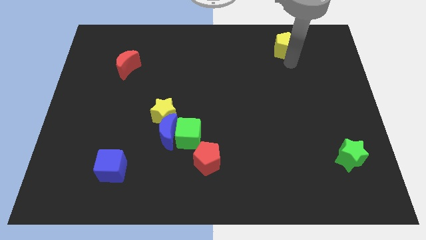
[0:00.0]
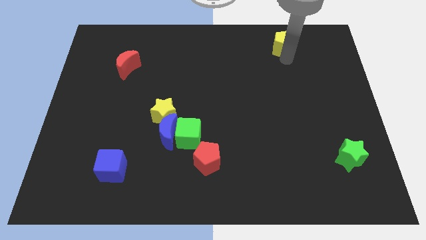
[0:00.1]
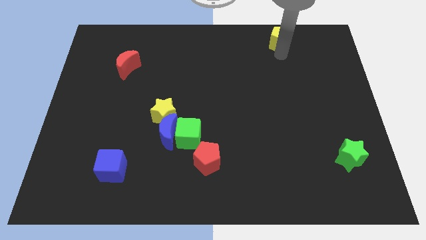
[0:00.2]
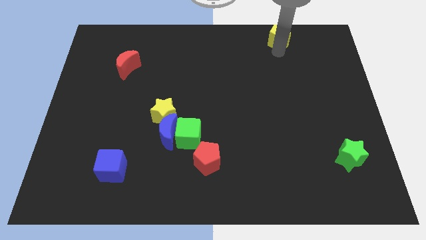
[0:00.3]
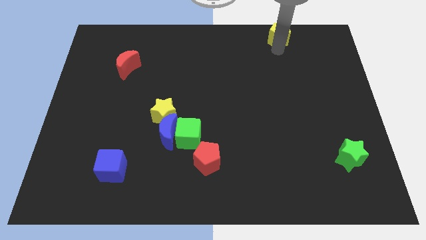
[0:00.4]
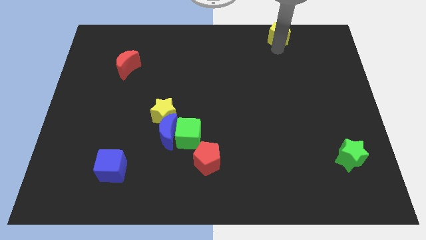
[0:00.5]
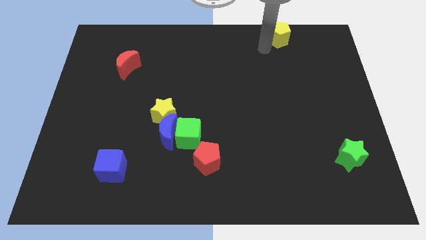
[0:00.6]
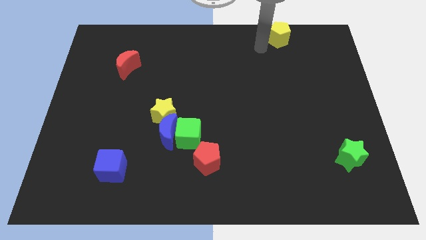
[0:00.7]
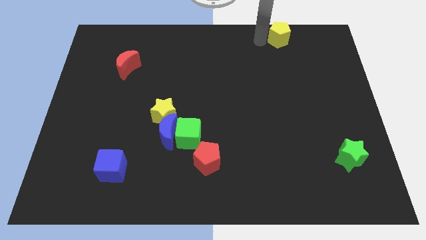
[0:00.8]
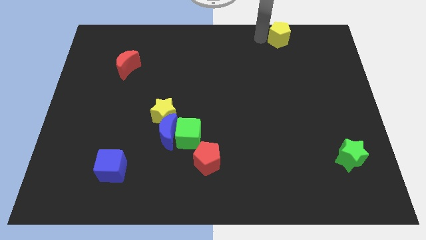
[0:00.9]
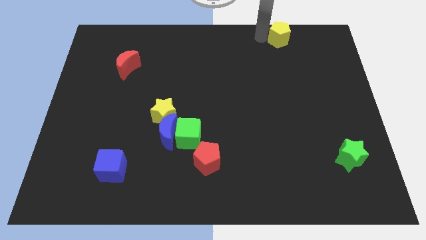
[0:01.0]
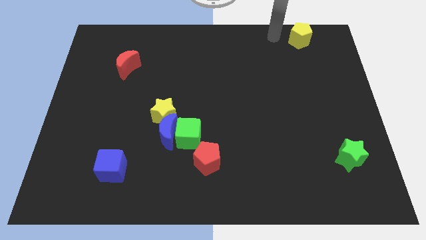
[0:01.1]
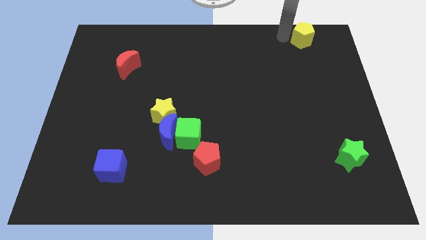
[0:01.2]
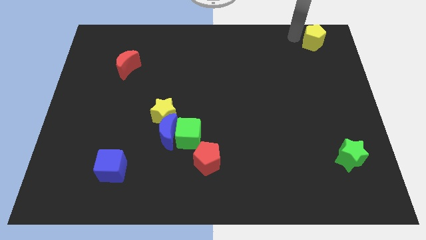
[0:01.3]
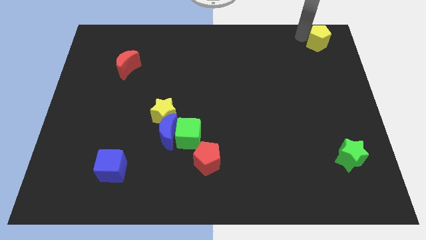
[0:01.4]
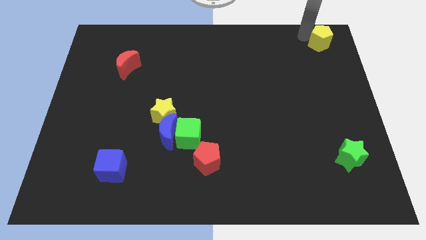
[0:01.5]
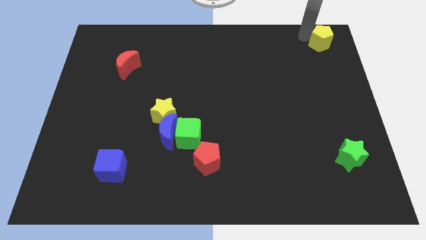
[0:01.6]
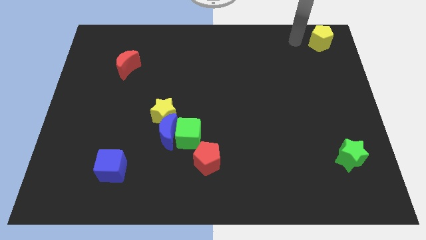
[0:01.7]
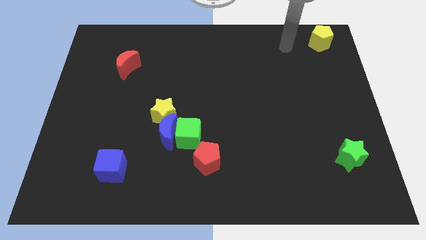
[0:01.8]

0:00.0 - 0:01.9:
place the yellow pentagon to the top right side

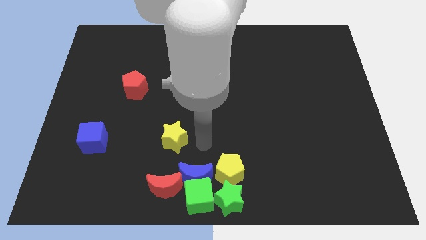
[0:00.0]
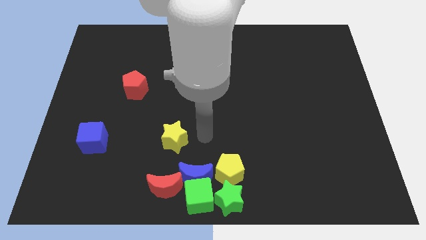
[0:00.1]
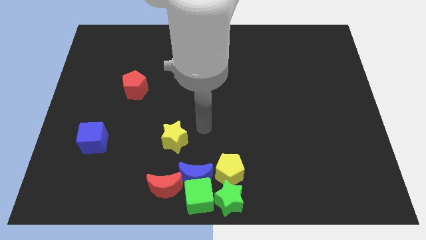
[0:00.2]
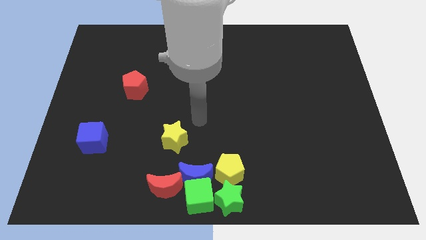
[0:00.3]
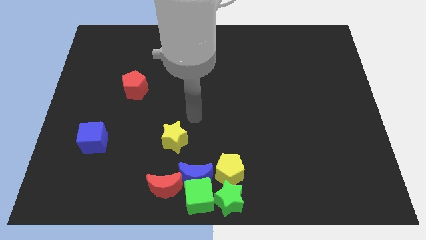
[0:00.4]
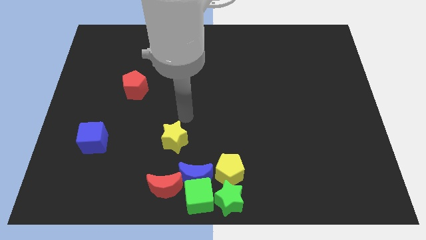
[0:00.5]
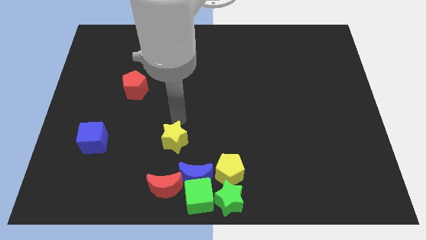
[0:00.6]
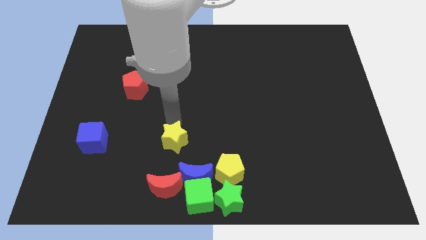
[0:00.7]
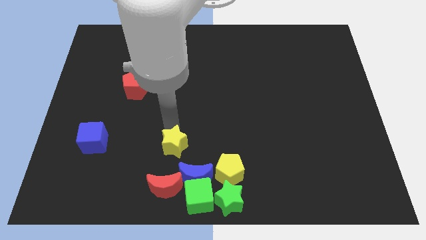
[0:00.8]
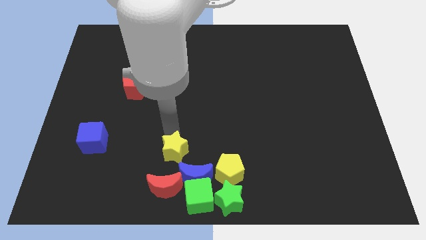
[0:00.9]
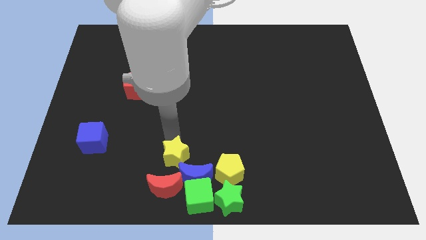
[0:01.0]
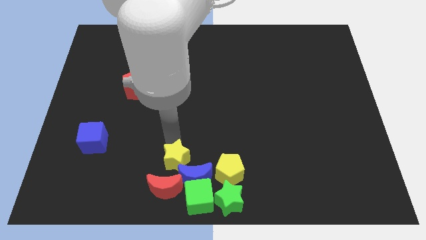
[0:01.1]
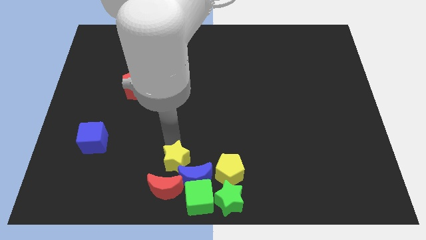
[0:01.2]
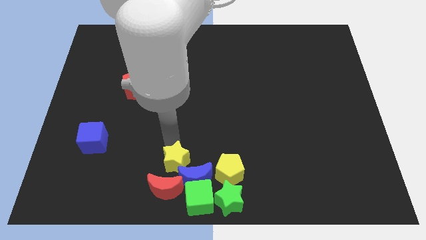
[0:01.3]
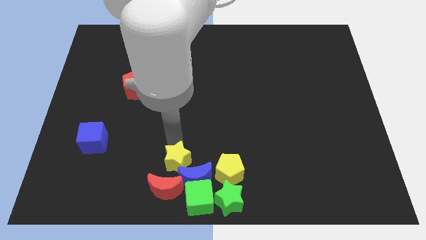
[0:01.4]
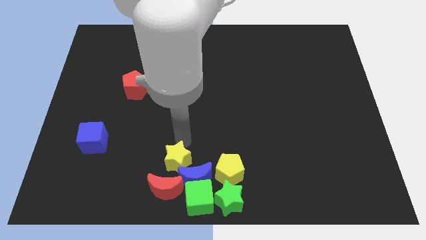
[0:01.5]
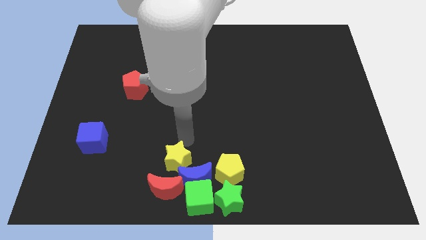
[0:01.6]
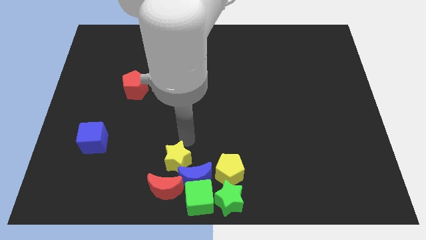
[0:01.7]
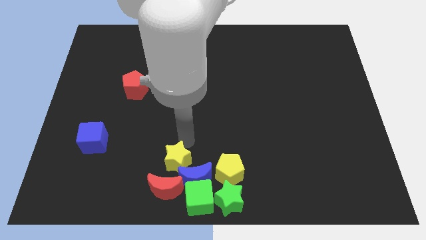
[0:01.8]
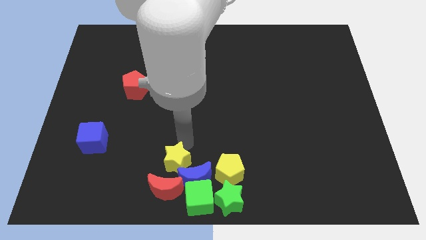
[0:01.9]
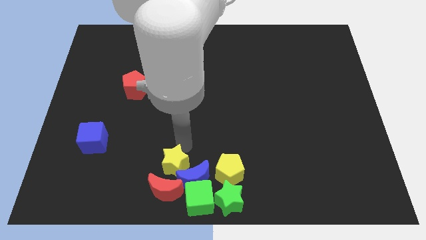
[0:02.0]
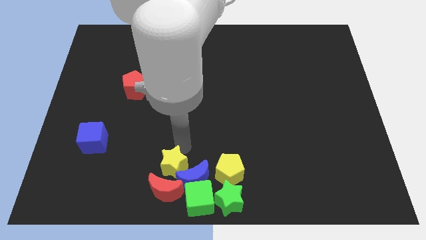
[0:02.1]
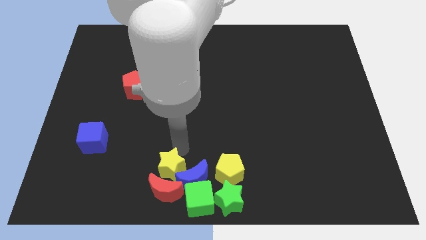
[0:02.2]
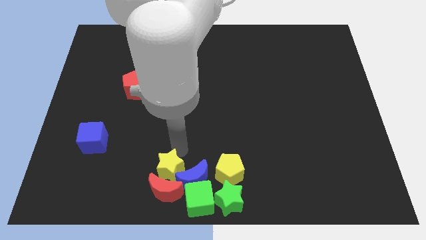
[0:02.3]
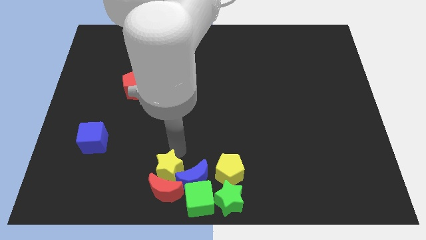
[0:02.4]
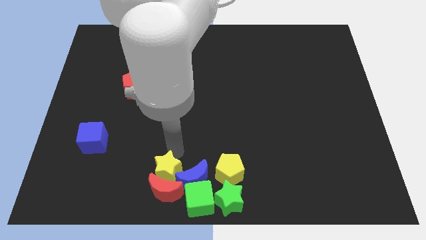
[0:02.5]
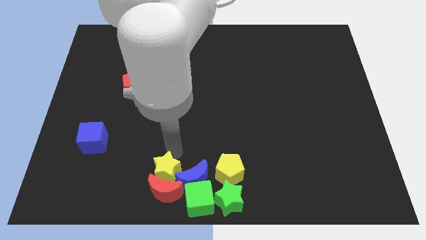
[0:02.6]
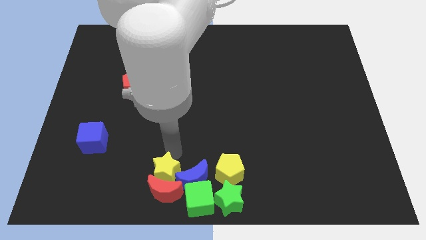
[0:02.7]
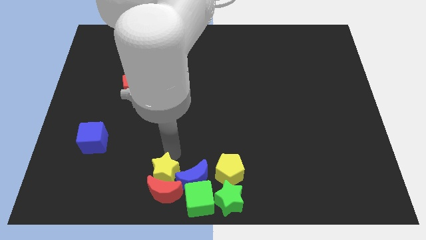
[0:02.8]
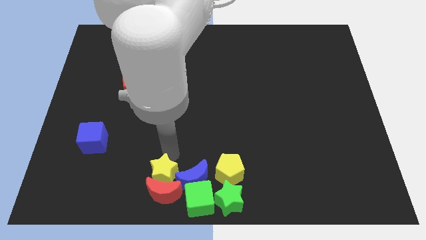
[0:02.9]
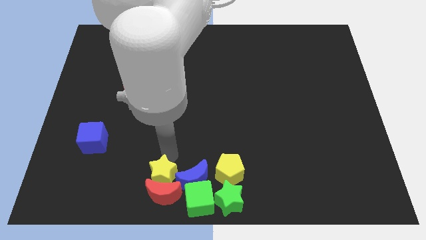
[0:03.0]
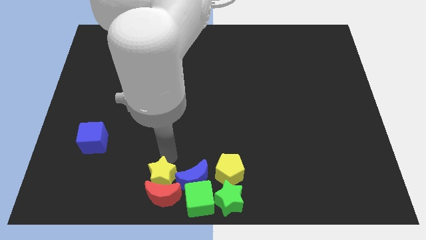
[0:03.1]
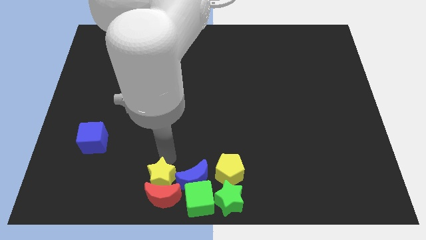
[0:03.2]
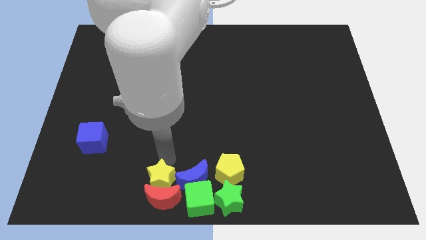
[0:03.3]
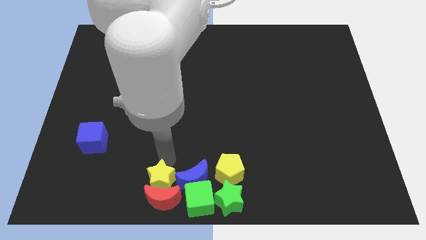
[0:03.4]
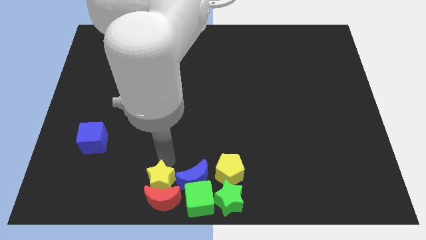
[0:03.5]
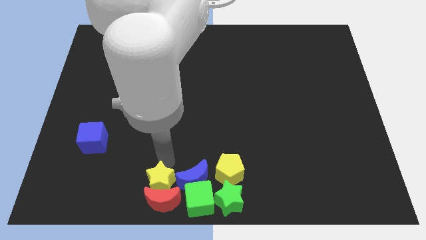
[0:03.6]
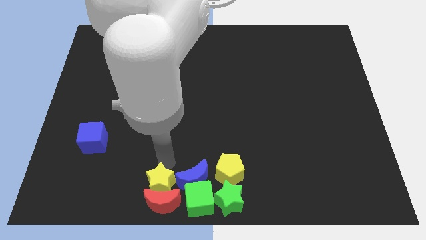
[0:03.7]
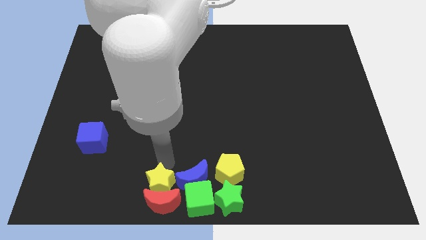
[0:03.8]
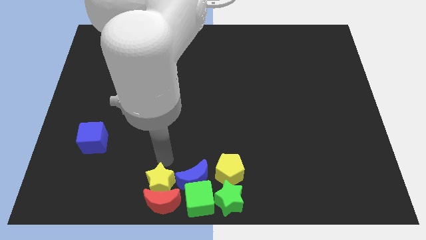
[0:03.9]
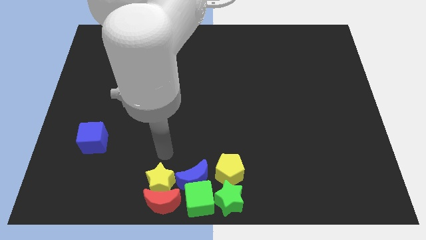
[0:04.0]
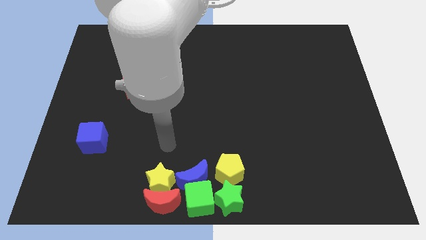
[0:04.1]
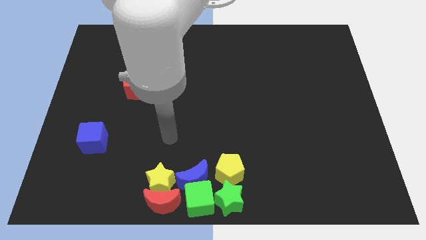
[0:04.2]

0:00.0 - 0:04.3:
move the red crescent with the yellow star towards the bottom center of the board

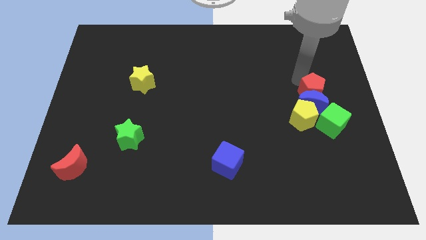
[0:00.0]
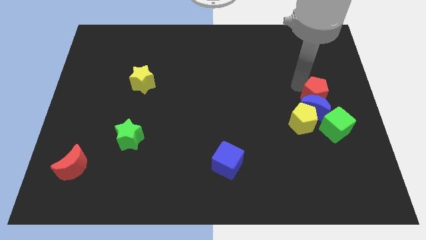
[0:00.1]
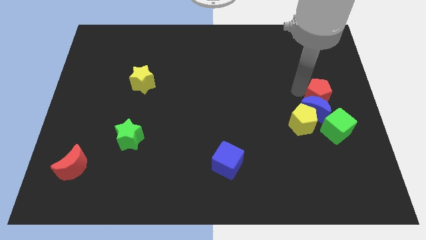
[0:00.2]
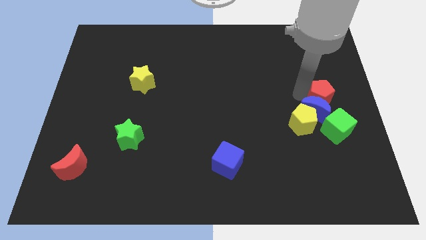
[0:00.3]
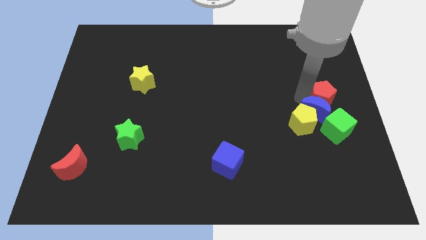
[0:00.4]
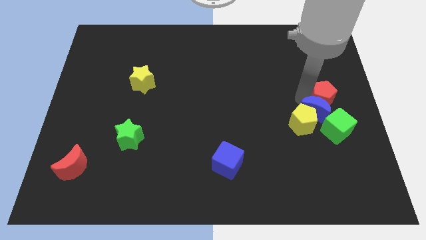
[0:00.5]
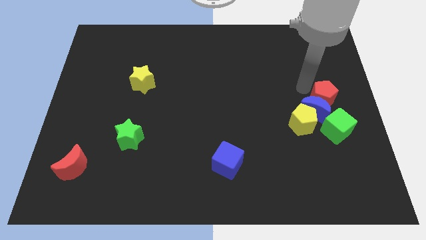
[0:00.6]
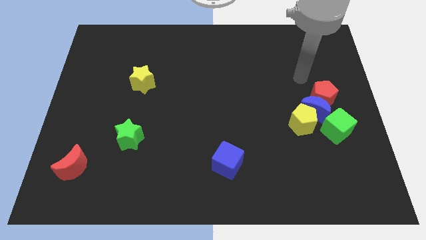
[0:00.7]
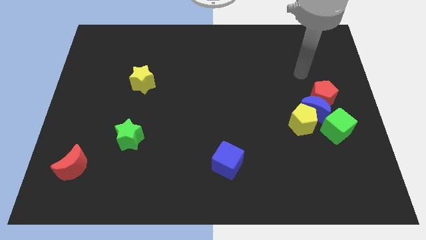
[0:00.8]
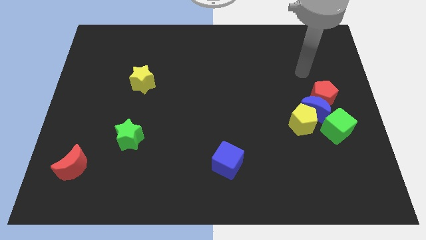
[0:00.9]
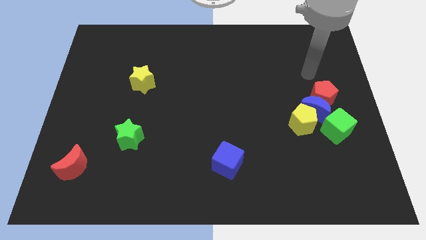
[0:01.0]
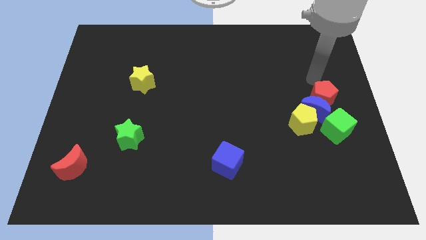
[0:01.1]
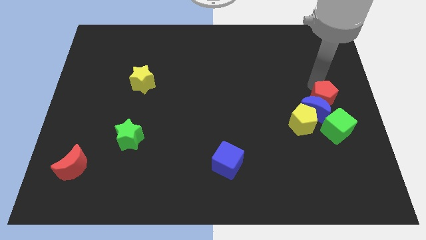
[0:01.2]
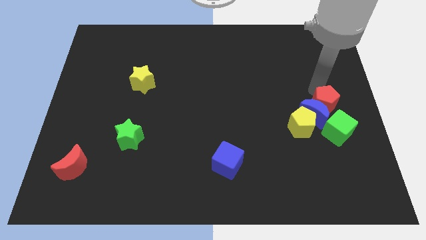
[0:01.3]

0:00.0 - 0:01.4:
move red pentagon above the green cube

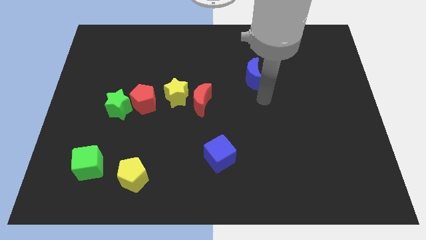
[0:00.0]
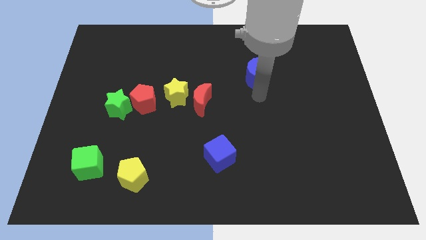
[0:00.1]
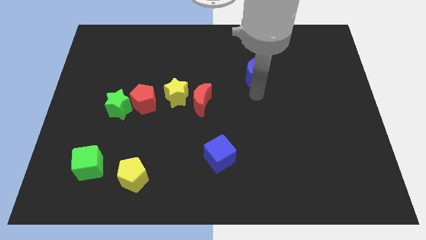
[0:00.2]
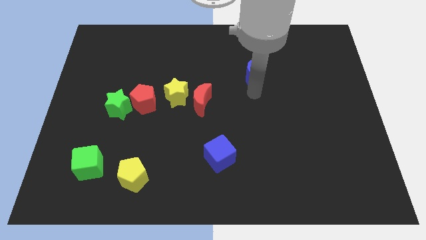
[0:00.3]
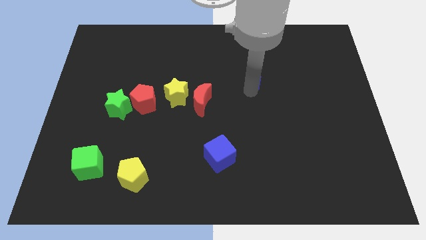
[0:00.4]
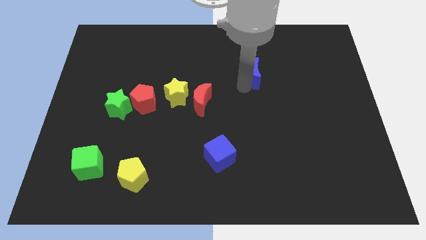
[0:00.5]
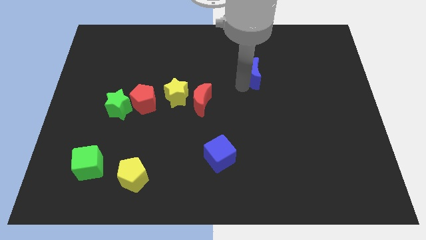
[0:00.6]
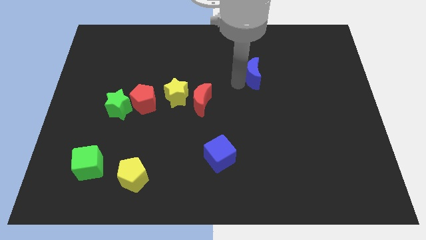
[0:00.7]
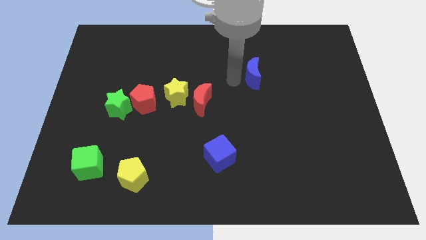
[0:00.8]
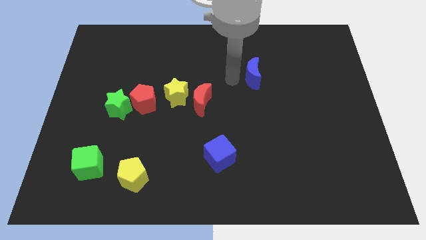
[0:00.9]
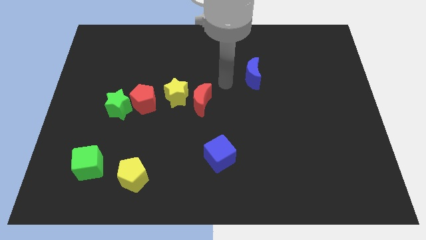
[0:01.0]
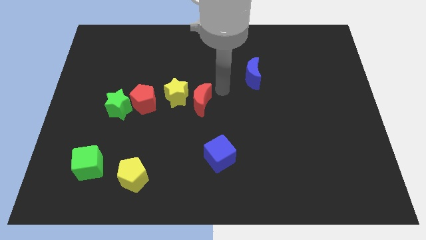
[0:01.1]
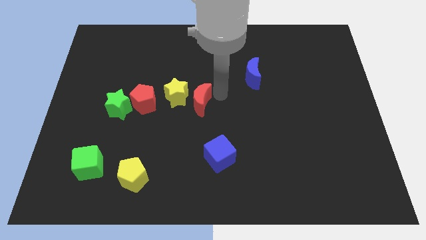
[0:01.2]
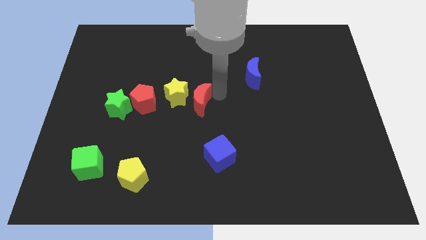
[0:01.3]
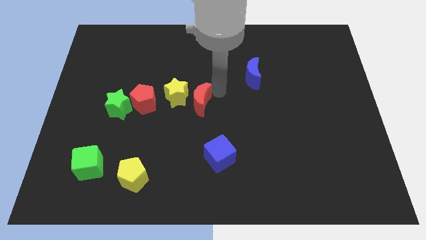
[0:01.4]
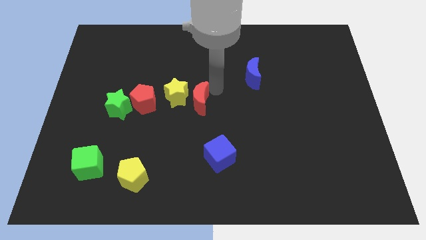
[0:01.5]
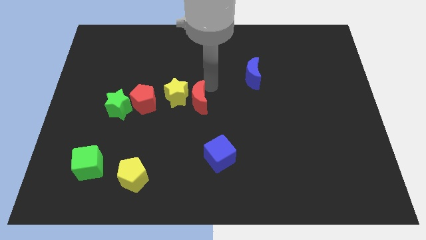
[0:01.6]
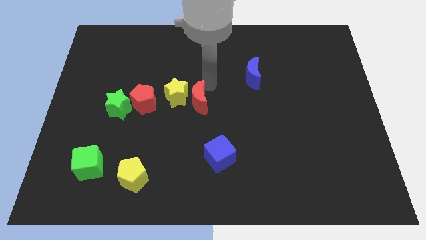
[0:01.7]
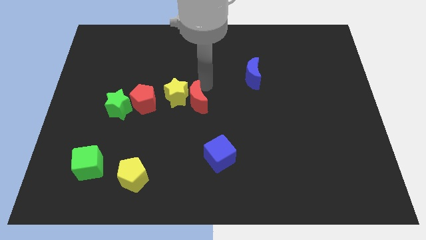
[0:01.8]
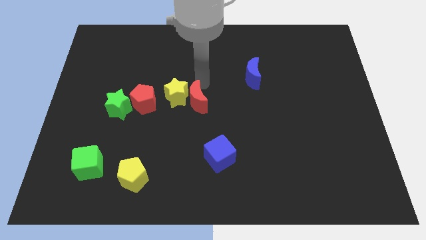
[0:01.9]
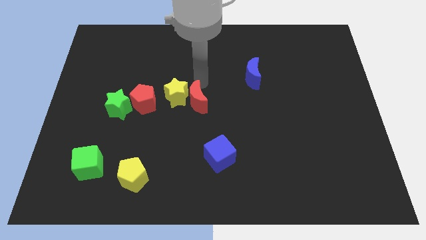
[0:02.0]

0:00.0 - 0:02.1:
slightly move the red crescent to the right of the yellow star
